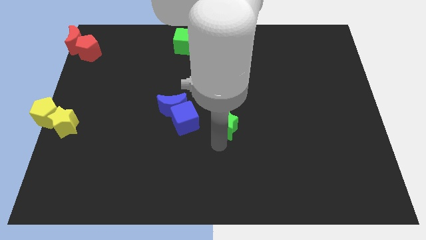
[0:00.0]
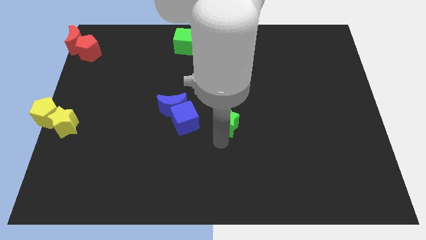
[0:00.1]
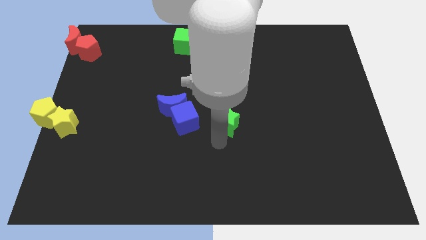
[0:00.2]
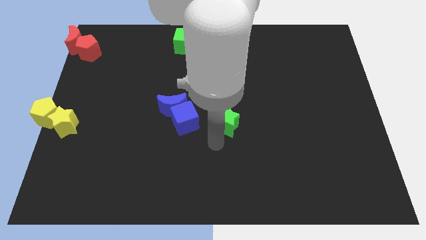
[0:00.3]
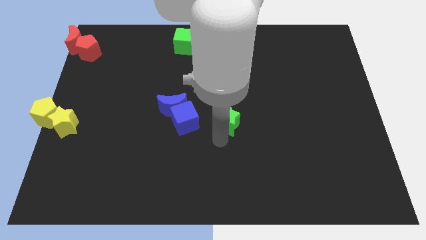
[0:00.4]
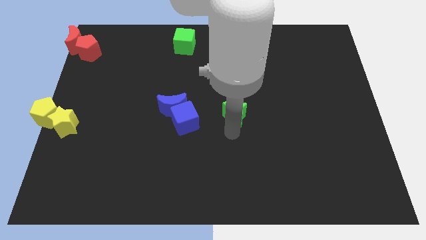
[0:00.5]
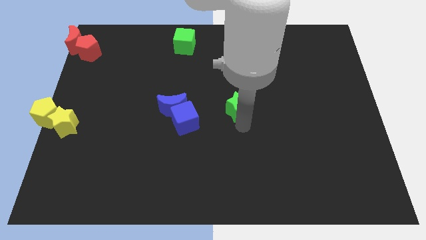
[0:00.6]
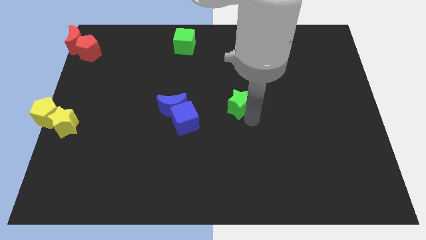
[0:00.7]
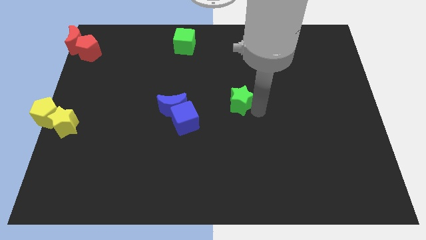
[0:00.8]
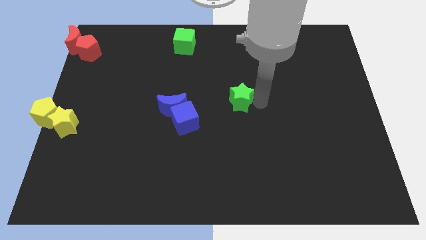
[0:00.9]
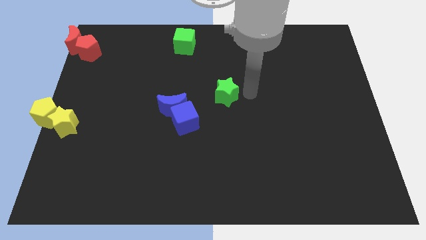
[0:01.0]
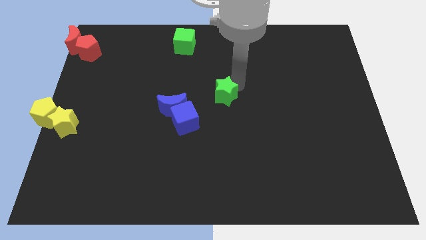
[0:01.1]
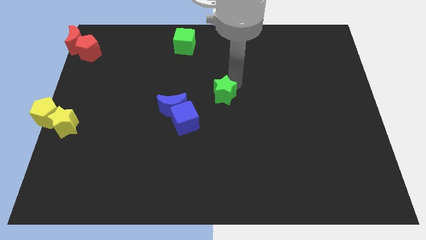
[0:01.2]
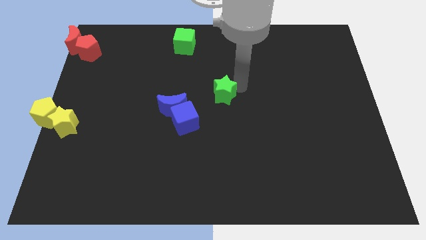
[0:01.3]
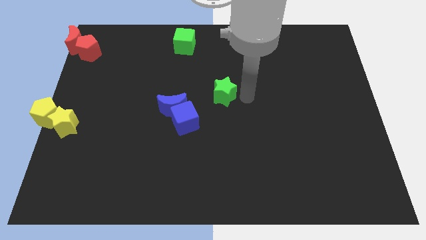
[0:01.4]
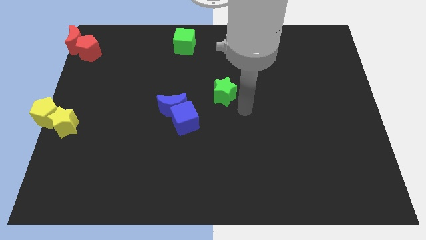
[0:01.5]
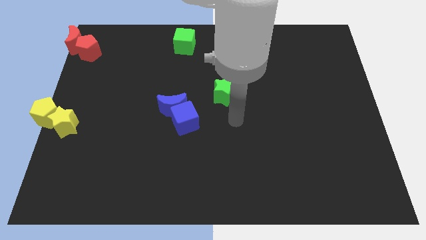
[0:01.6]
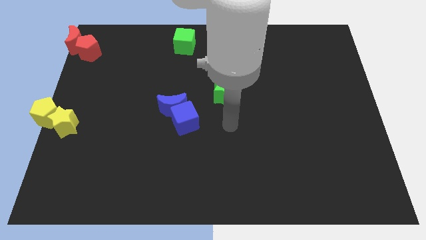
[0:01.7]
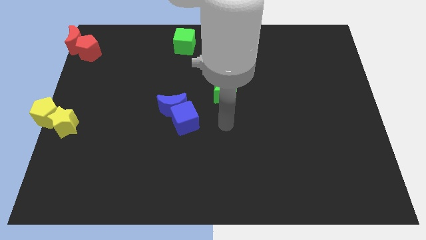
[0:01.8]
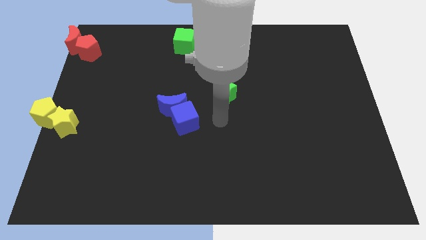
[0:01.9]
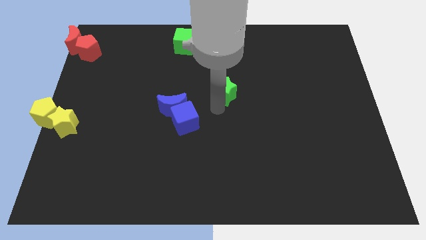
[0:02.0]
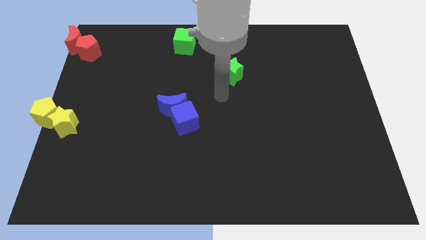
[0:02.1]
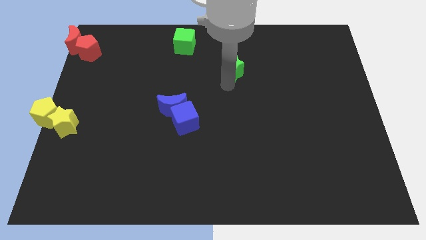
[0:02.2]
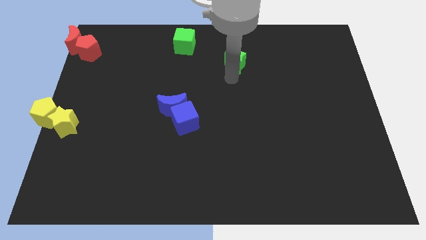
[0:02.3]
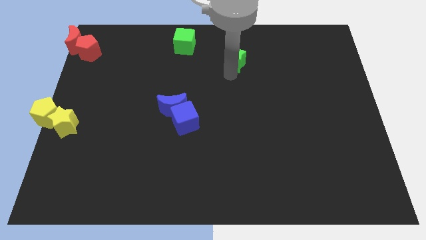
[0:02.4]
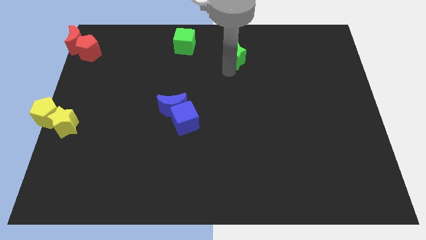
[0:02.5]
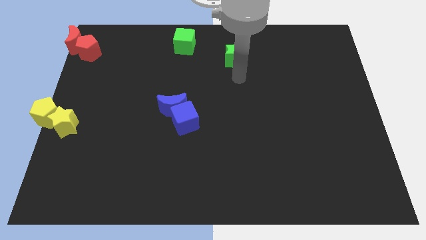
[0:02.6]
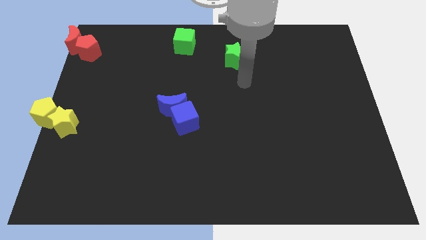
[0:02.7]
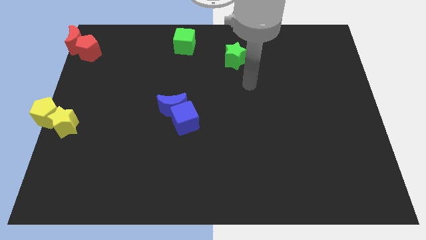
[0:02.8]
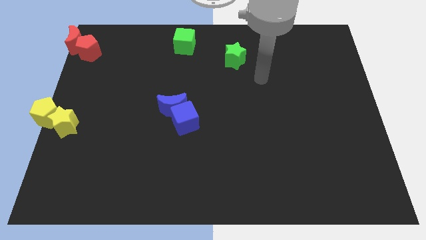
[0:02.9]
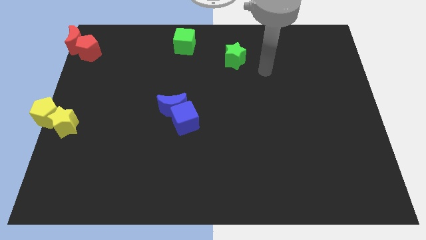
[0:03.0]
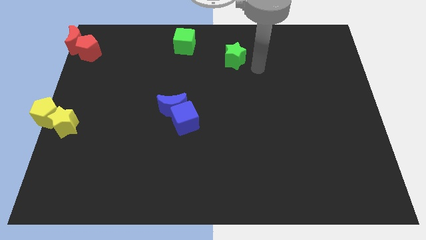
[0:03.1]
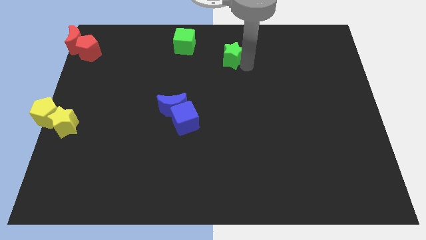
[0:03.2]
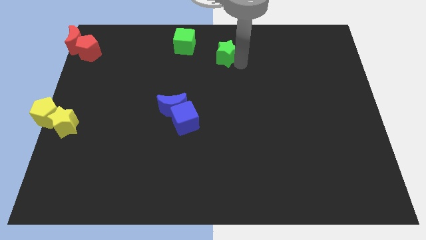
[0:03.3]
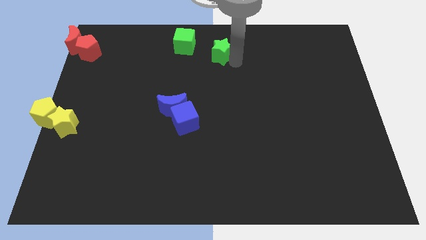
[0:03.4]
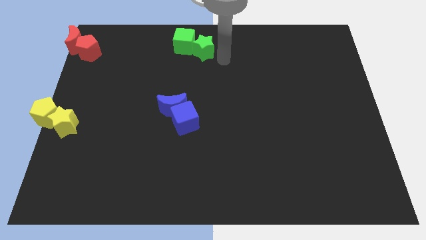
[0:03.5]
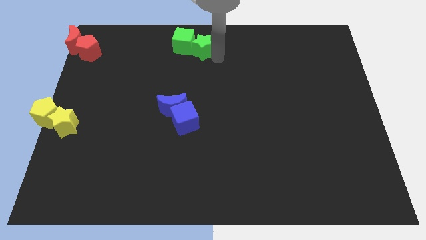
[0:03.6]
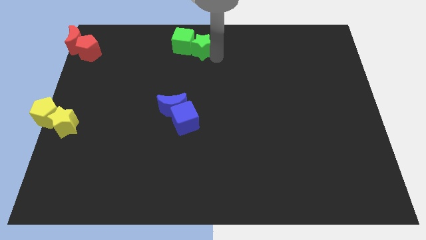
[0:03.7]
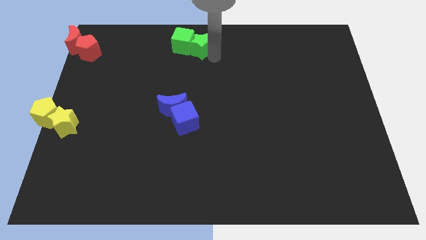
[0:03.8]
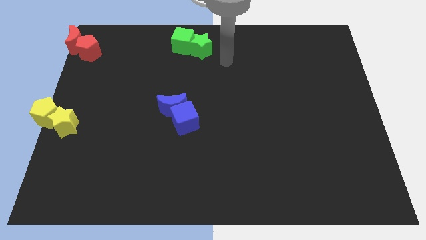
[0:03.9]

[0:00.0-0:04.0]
push the green star into the green cube

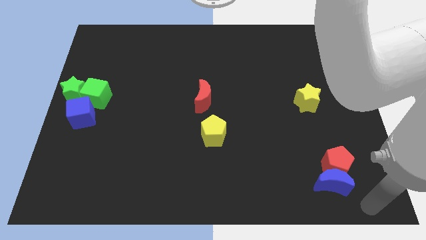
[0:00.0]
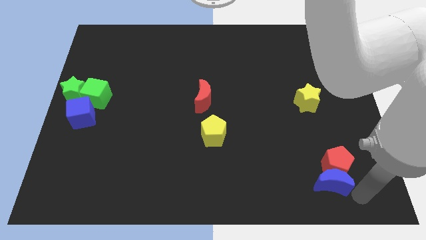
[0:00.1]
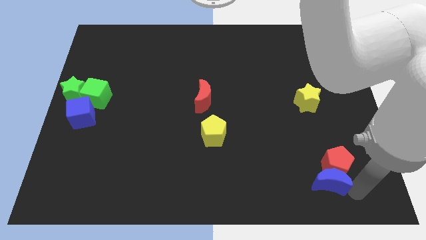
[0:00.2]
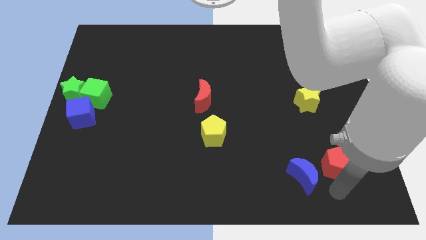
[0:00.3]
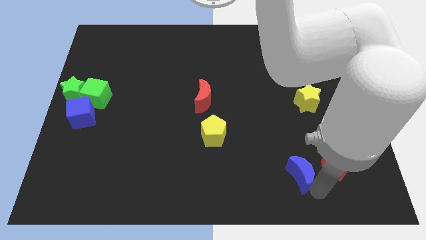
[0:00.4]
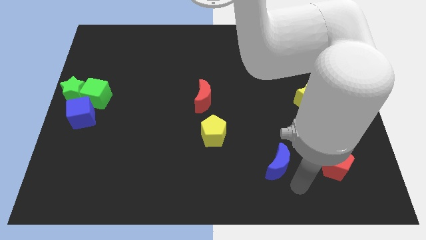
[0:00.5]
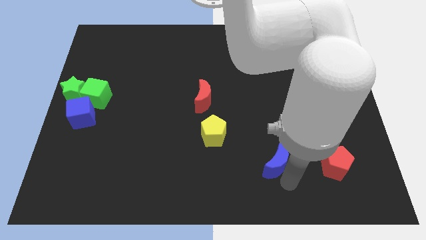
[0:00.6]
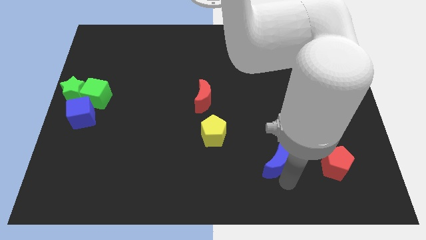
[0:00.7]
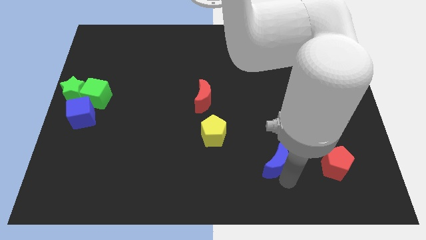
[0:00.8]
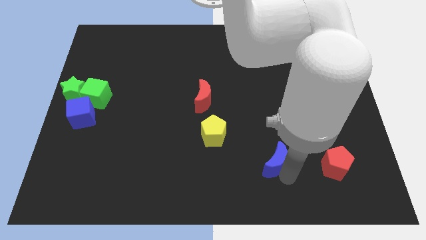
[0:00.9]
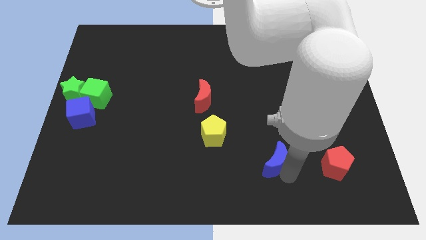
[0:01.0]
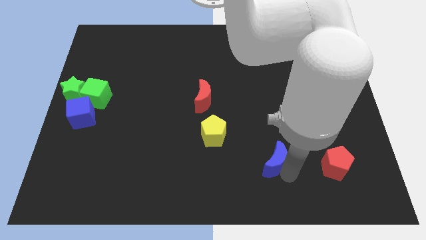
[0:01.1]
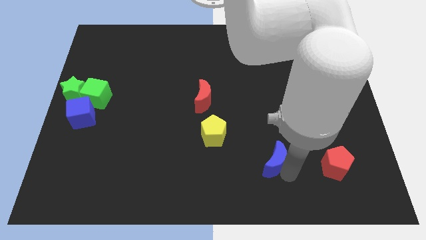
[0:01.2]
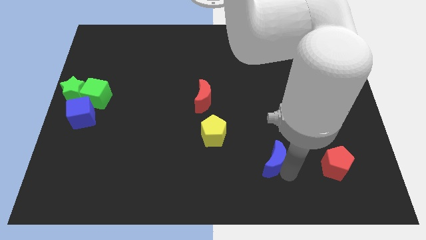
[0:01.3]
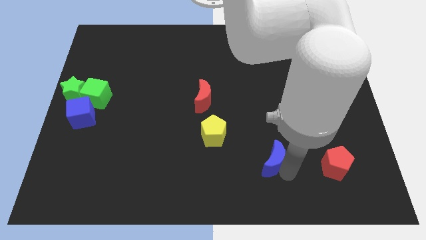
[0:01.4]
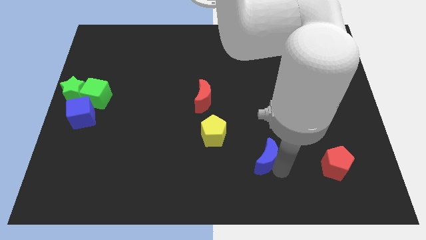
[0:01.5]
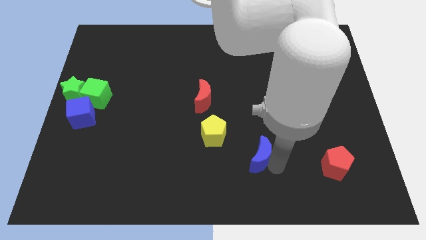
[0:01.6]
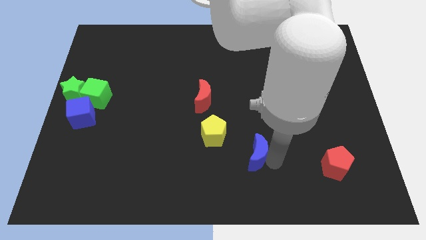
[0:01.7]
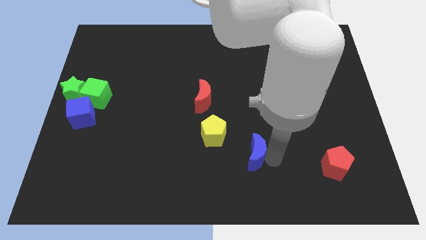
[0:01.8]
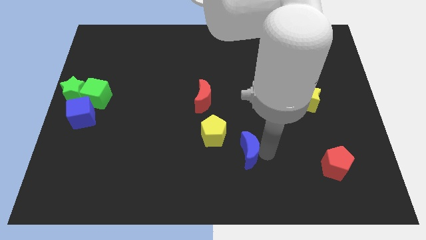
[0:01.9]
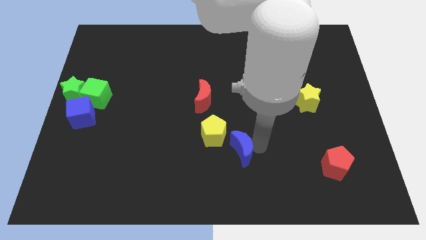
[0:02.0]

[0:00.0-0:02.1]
separate the blue crescent from the red pentagon

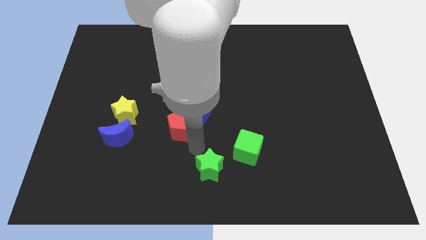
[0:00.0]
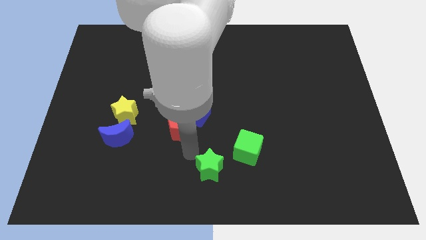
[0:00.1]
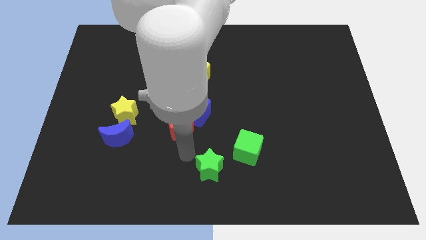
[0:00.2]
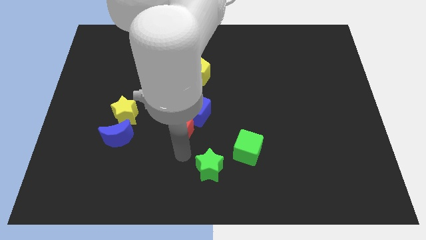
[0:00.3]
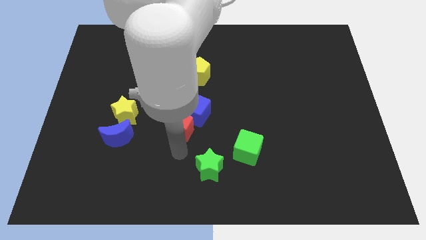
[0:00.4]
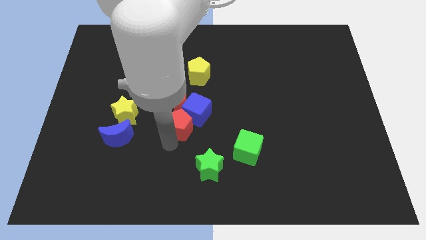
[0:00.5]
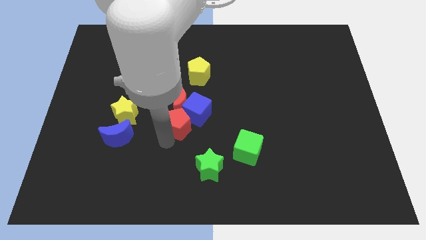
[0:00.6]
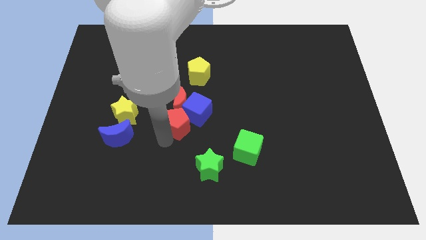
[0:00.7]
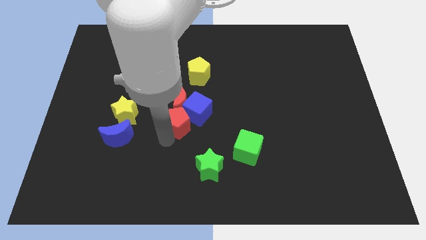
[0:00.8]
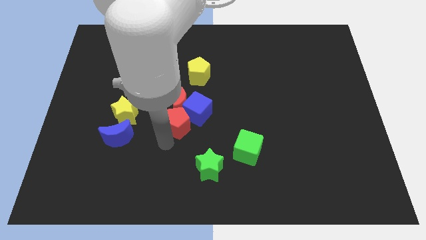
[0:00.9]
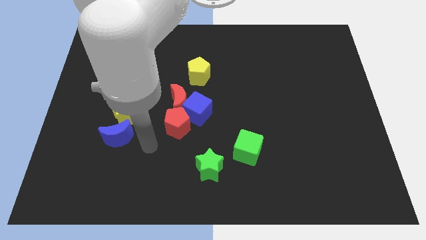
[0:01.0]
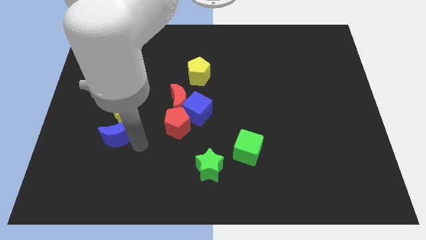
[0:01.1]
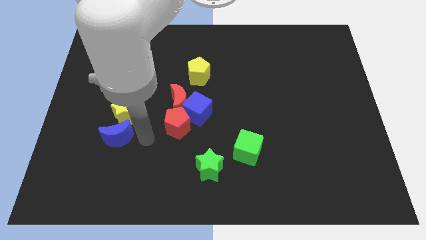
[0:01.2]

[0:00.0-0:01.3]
move your arm to the right of blue crescent

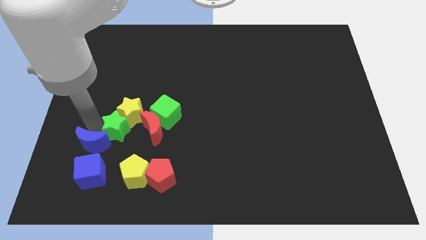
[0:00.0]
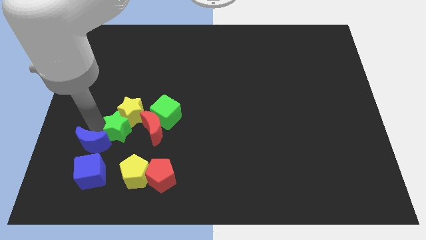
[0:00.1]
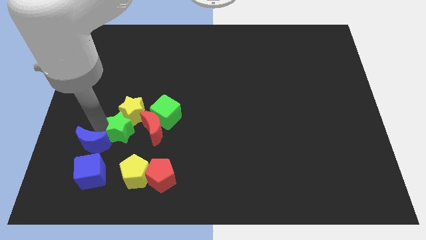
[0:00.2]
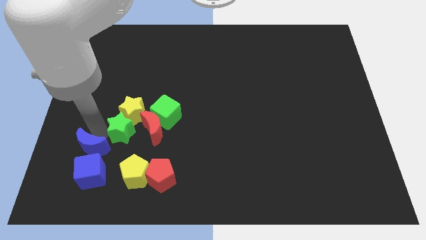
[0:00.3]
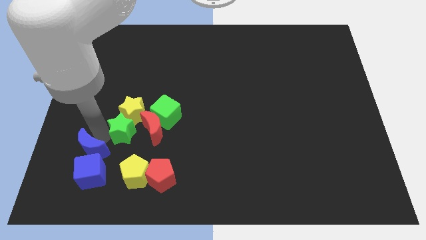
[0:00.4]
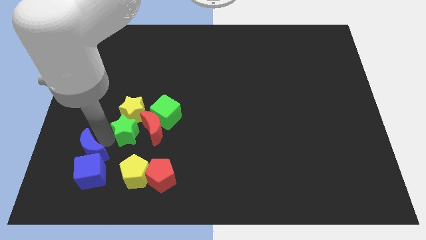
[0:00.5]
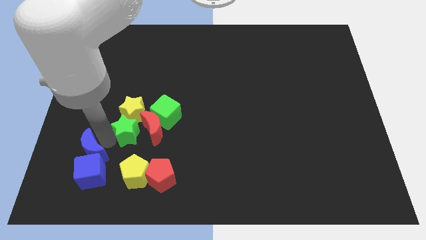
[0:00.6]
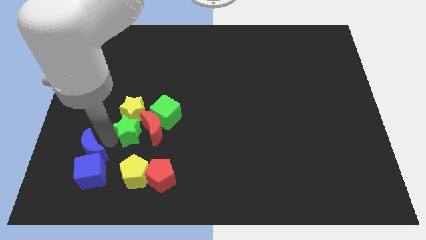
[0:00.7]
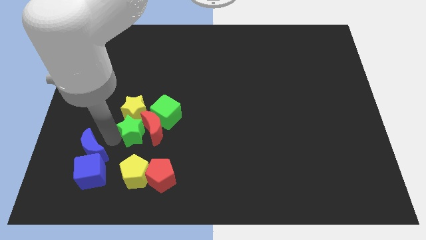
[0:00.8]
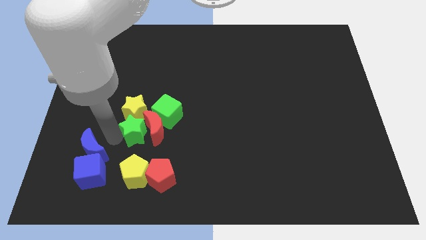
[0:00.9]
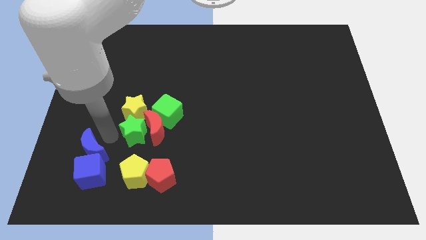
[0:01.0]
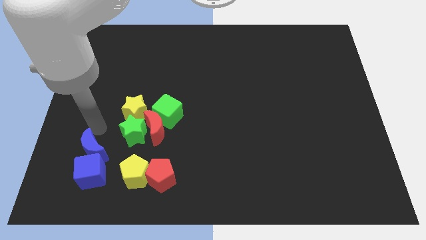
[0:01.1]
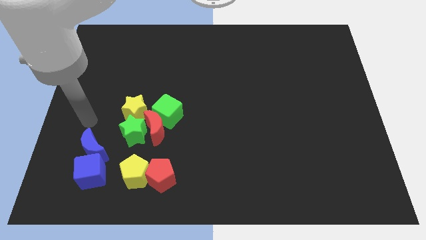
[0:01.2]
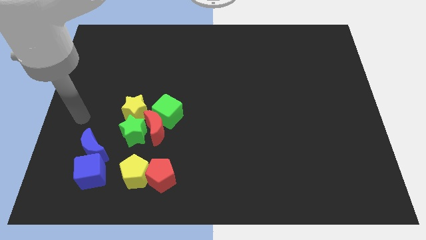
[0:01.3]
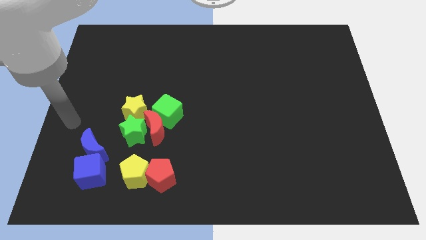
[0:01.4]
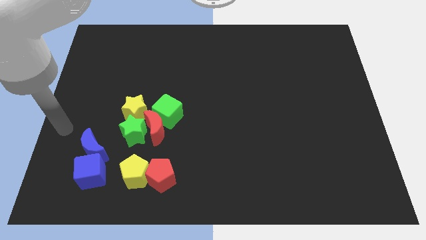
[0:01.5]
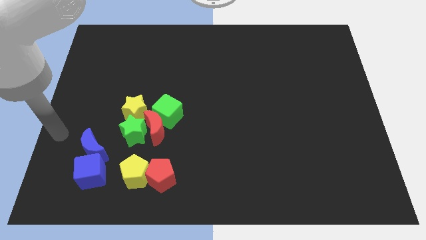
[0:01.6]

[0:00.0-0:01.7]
push the green star into the red crescent
